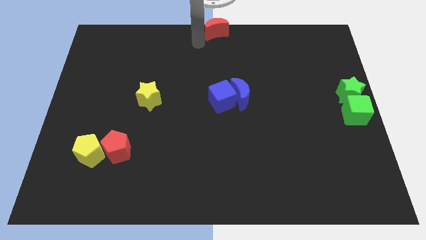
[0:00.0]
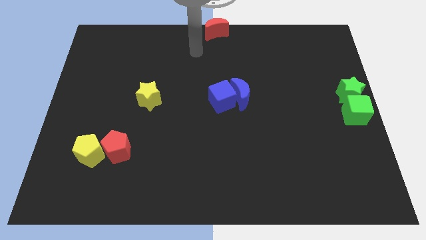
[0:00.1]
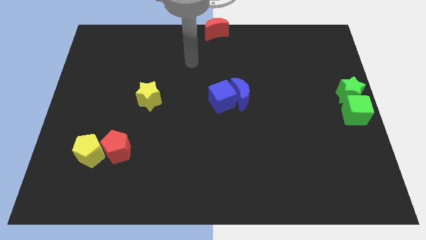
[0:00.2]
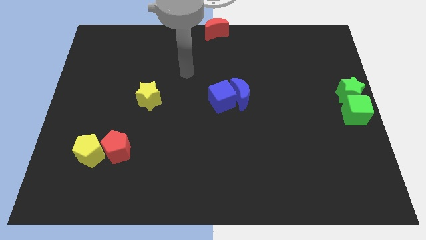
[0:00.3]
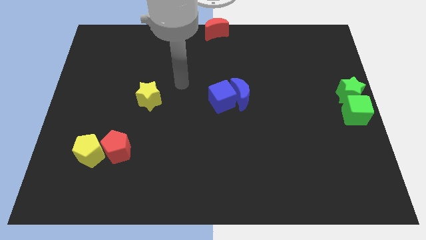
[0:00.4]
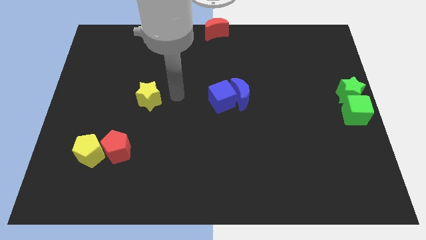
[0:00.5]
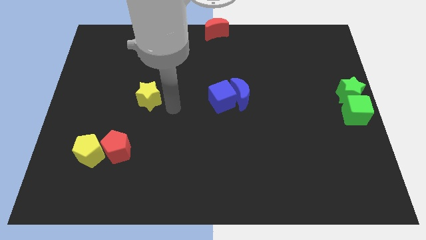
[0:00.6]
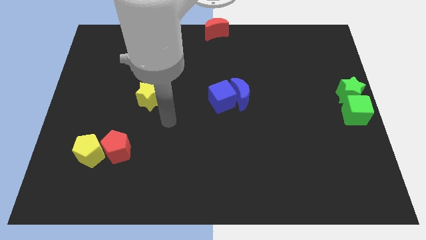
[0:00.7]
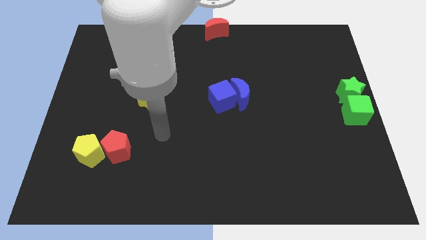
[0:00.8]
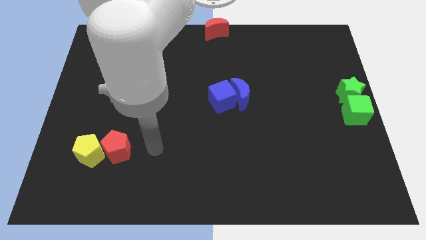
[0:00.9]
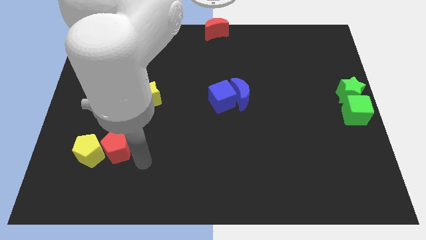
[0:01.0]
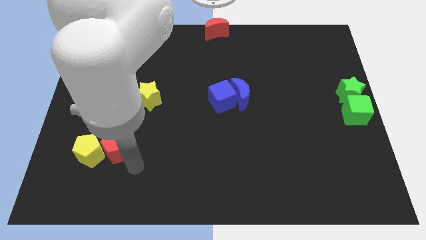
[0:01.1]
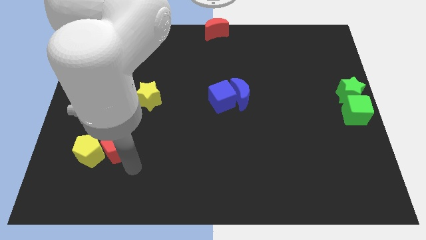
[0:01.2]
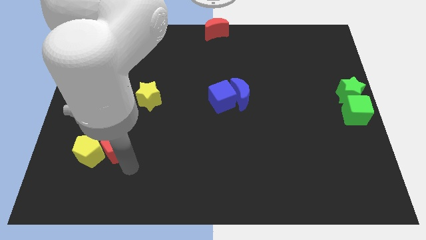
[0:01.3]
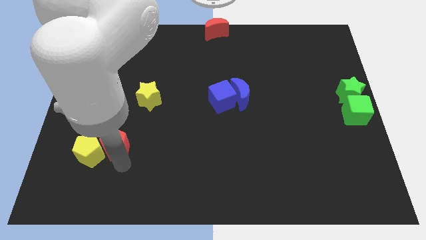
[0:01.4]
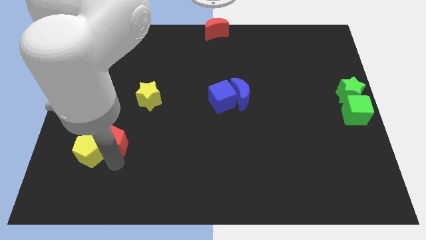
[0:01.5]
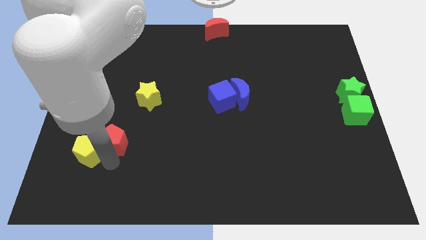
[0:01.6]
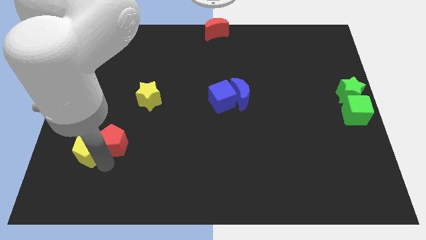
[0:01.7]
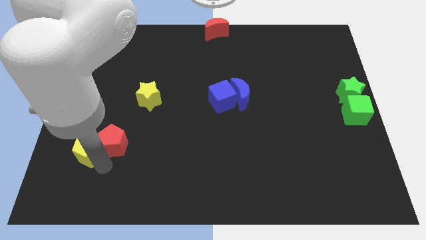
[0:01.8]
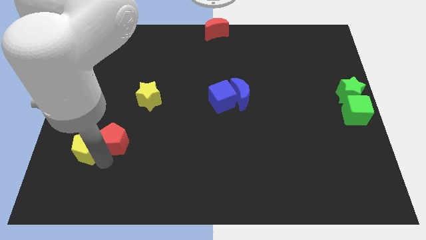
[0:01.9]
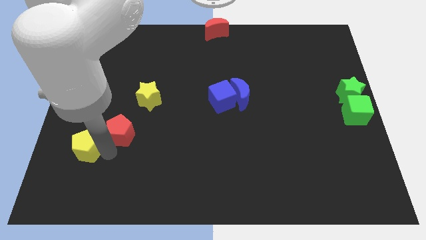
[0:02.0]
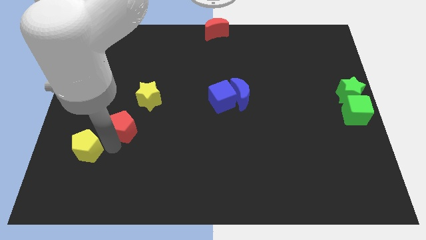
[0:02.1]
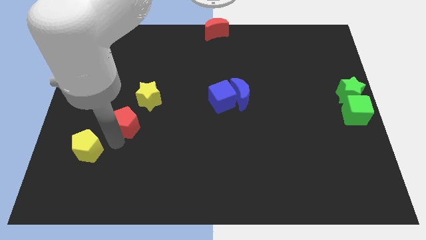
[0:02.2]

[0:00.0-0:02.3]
place the arm down to the red pentagon

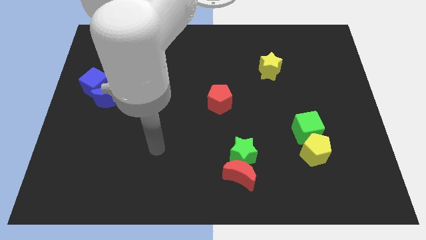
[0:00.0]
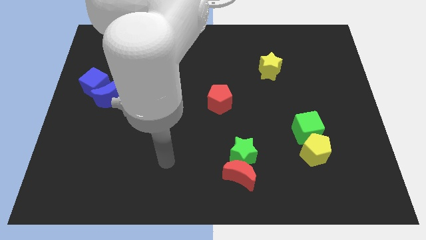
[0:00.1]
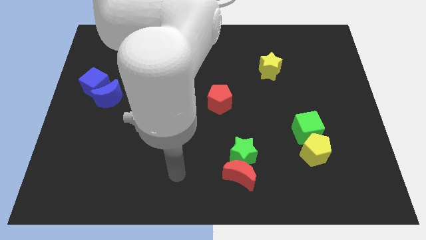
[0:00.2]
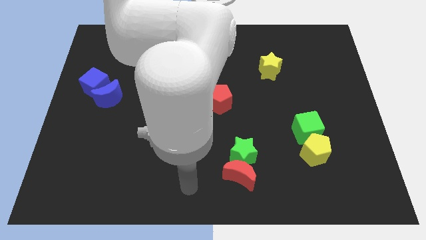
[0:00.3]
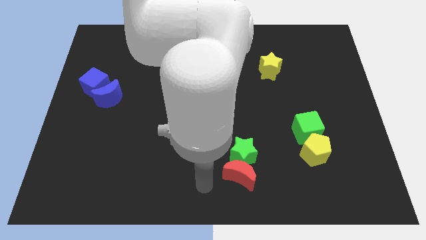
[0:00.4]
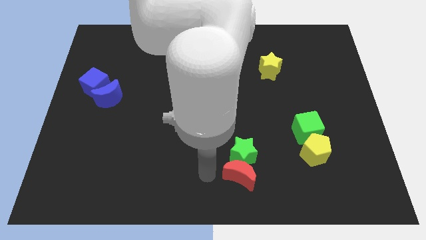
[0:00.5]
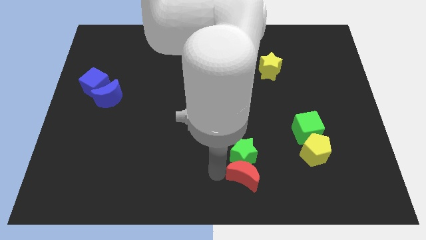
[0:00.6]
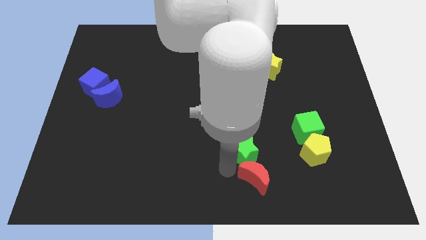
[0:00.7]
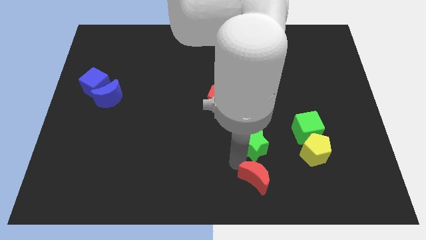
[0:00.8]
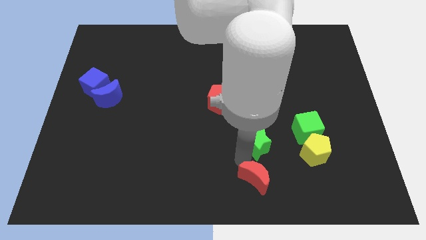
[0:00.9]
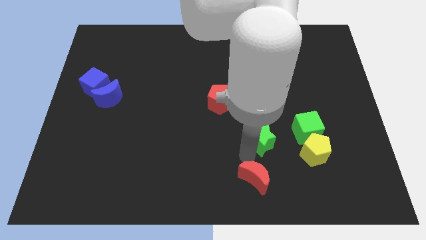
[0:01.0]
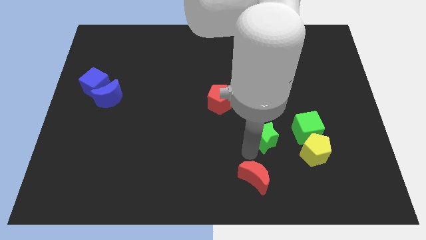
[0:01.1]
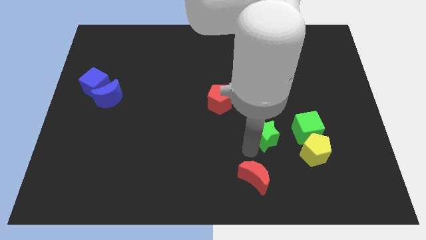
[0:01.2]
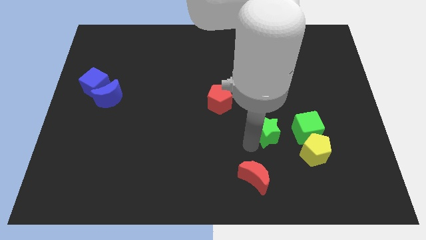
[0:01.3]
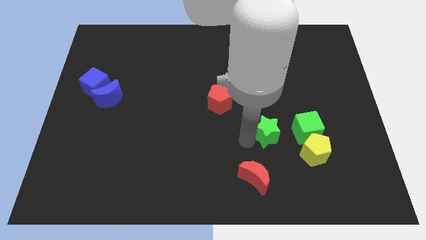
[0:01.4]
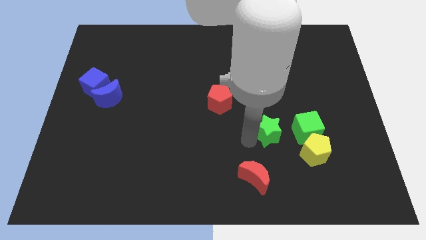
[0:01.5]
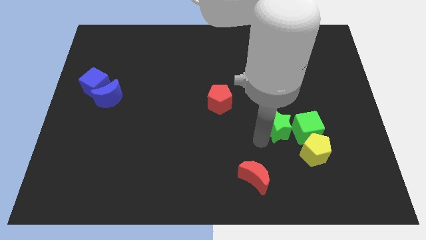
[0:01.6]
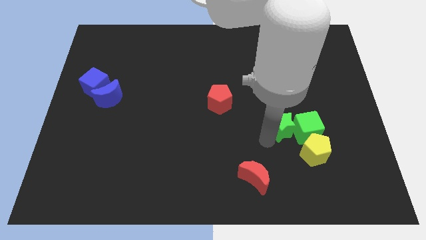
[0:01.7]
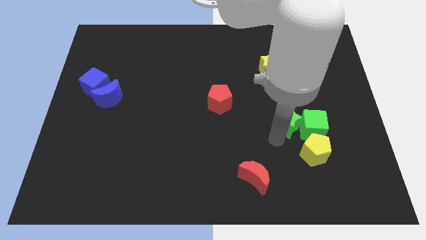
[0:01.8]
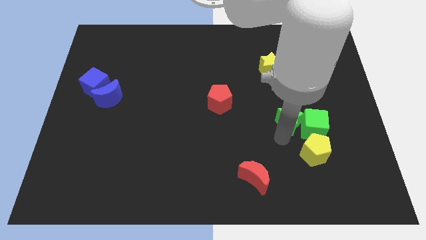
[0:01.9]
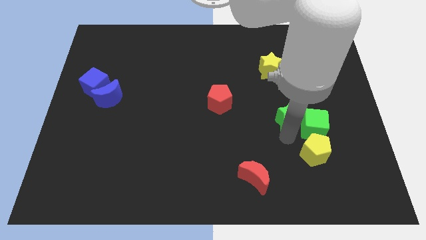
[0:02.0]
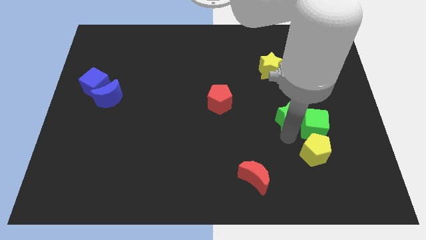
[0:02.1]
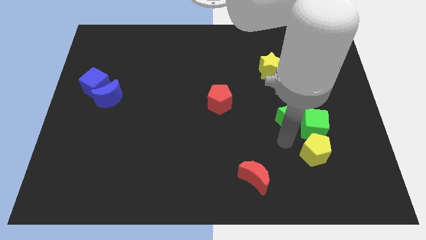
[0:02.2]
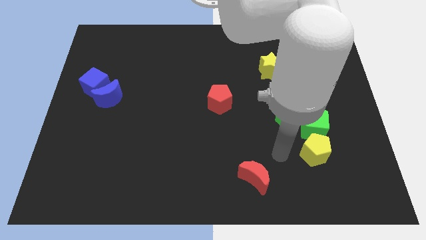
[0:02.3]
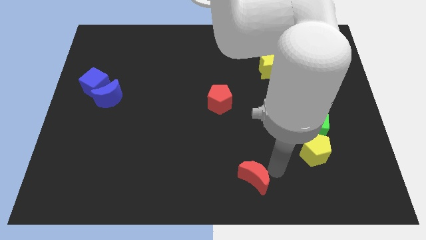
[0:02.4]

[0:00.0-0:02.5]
push the green cube with green star

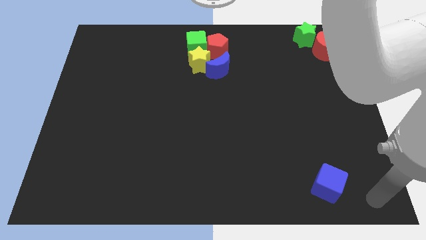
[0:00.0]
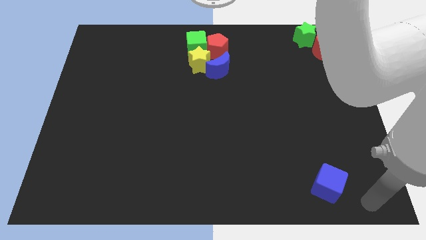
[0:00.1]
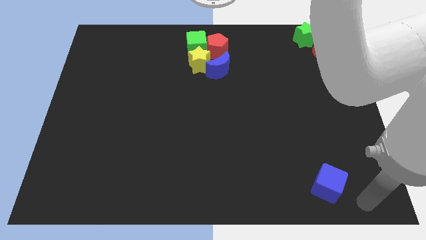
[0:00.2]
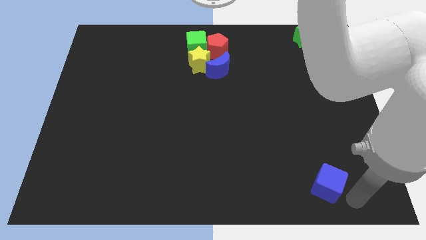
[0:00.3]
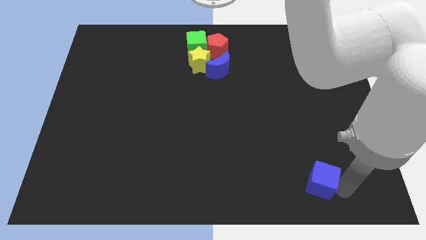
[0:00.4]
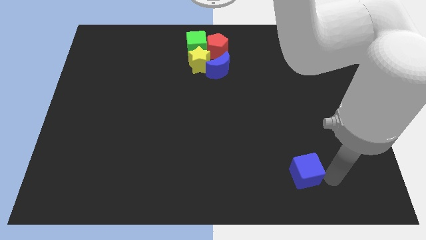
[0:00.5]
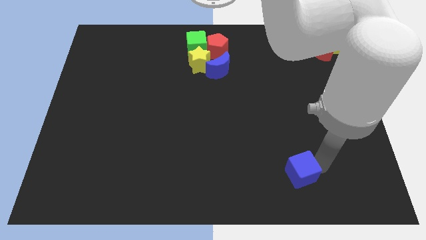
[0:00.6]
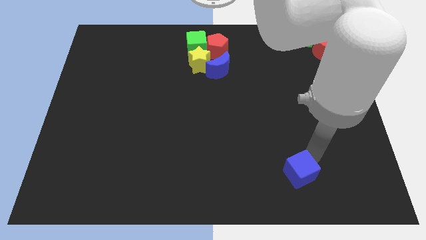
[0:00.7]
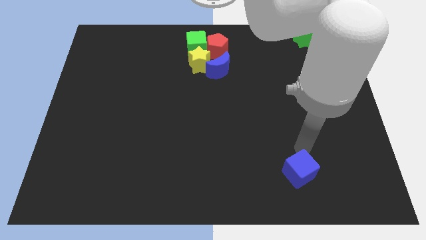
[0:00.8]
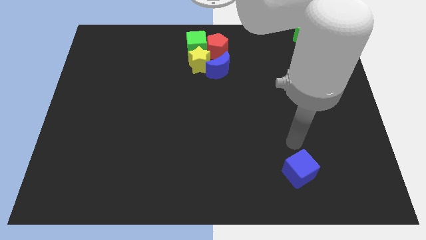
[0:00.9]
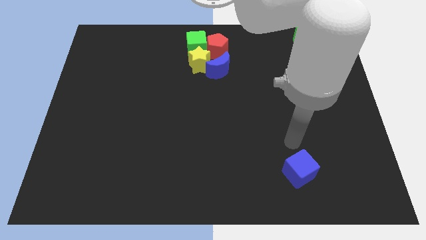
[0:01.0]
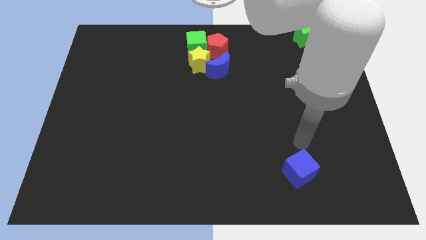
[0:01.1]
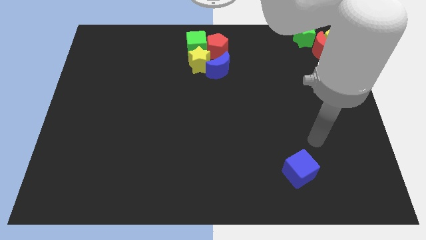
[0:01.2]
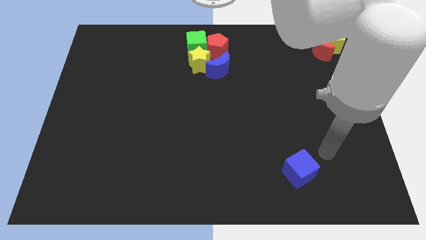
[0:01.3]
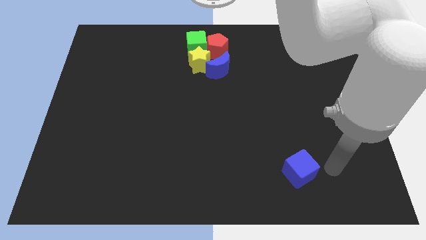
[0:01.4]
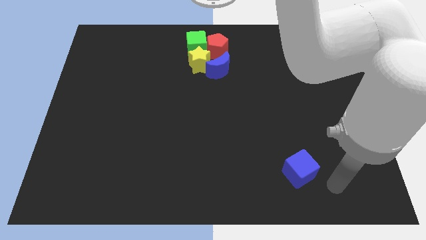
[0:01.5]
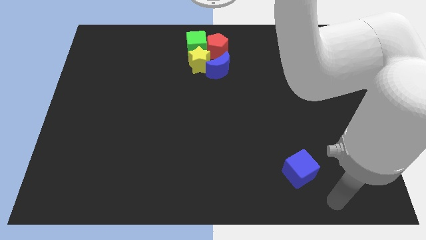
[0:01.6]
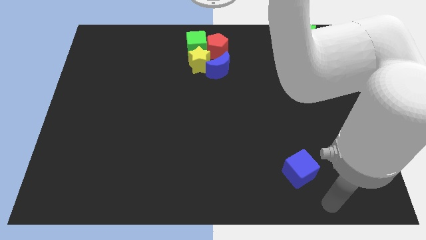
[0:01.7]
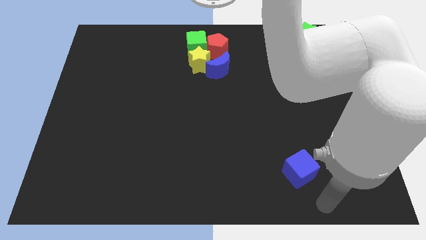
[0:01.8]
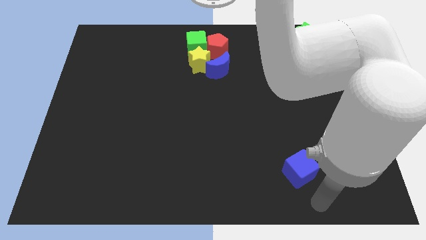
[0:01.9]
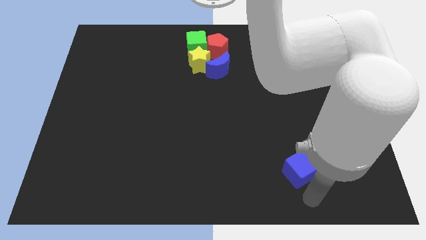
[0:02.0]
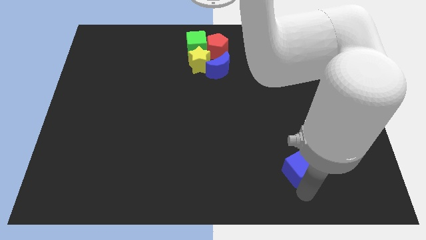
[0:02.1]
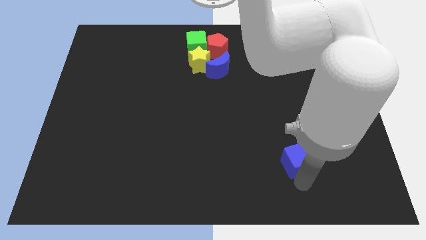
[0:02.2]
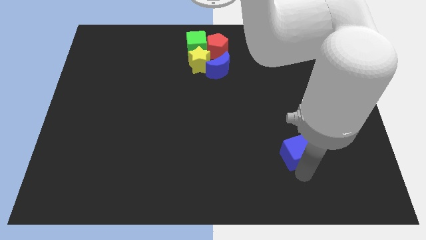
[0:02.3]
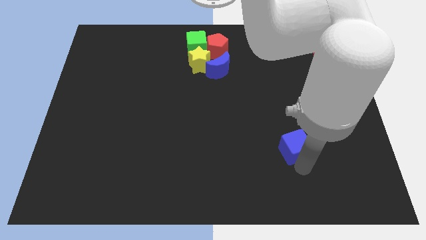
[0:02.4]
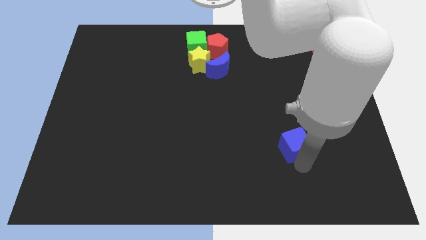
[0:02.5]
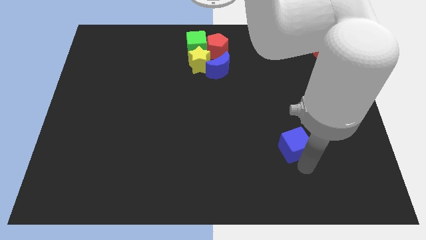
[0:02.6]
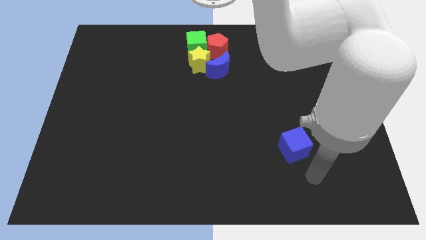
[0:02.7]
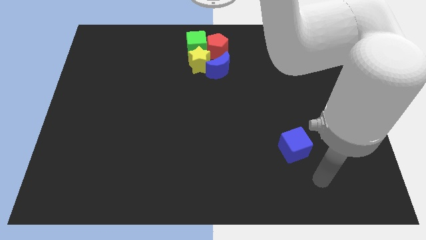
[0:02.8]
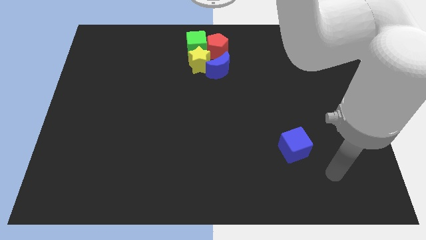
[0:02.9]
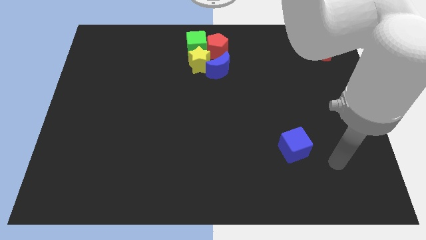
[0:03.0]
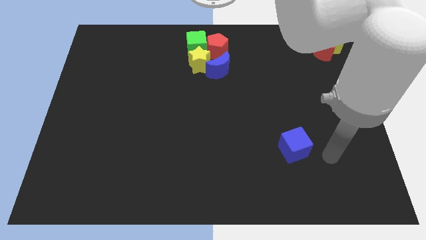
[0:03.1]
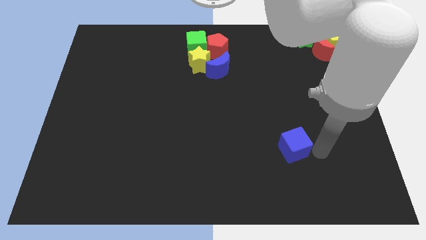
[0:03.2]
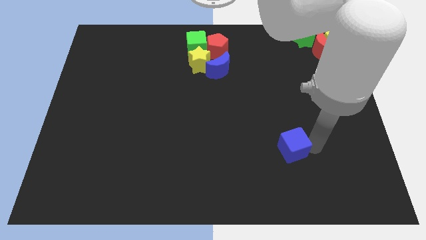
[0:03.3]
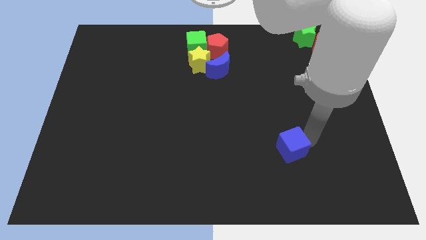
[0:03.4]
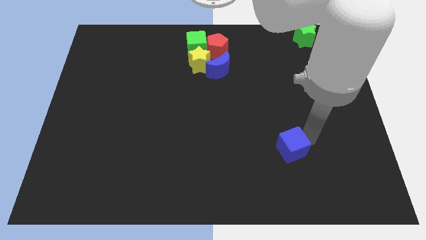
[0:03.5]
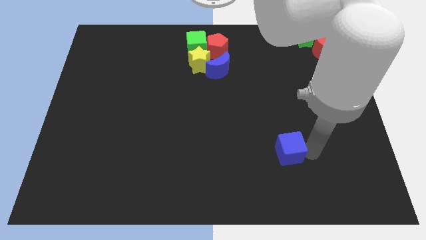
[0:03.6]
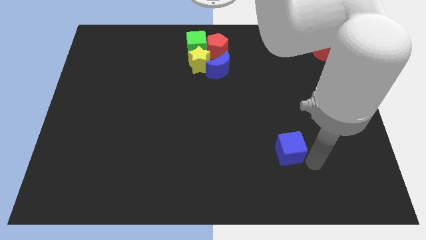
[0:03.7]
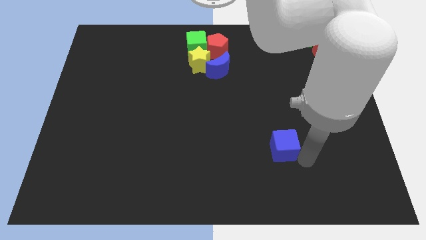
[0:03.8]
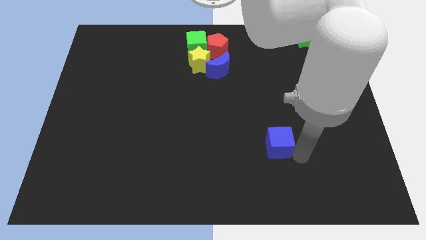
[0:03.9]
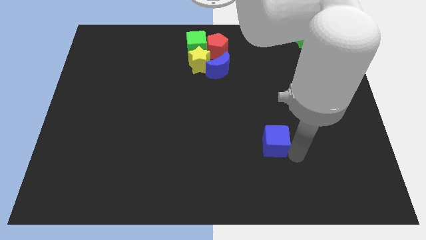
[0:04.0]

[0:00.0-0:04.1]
drag the blue cube to the top side of the board

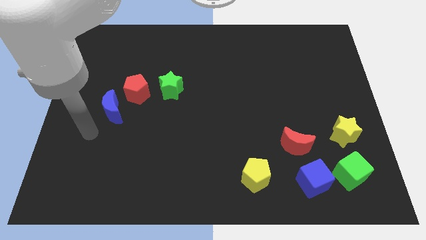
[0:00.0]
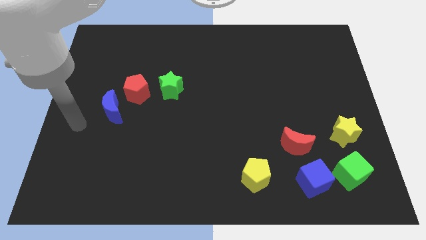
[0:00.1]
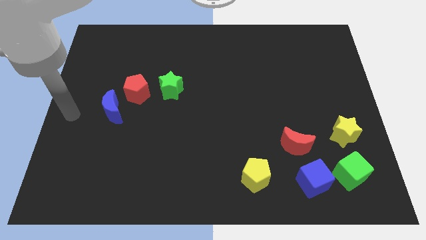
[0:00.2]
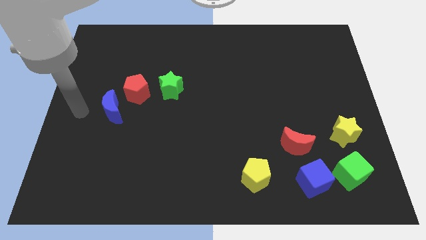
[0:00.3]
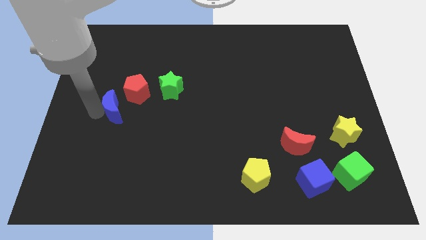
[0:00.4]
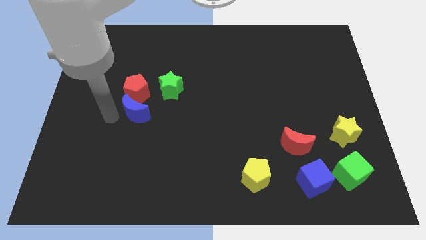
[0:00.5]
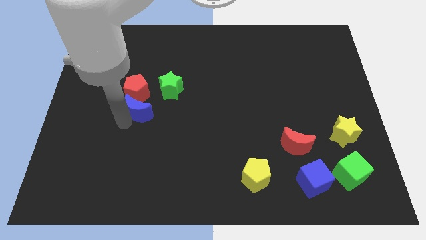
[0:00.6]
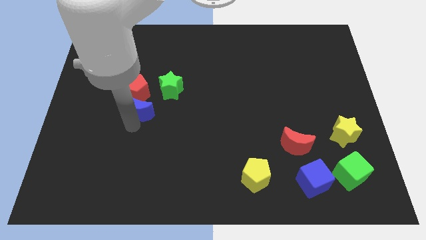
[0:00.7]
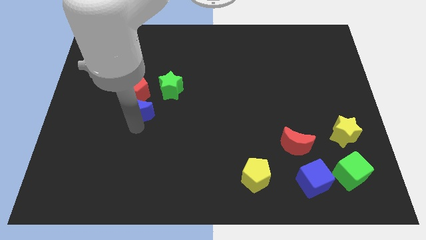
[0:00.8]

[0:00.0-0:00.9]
move the blue crescent to the bottom of the red pentagon
